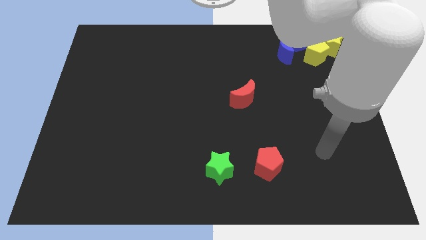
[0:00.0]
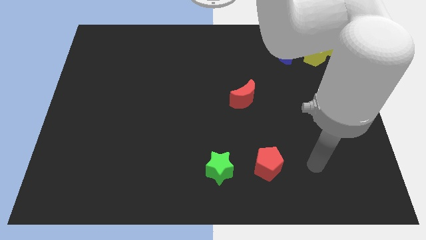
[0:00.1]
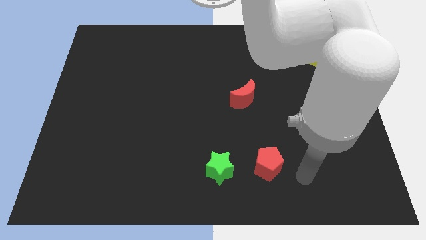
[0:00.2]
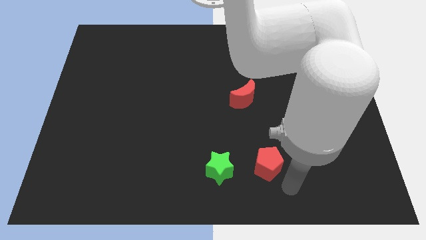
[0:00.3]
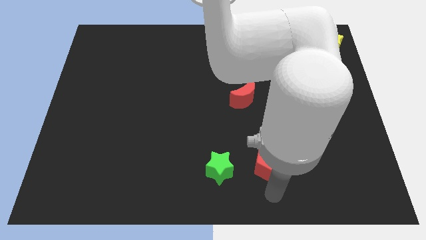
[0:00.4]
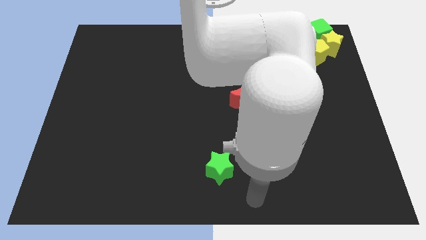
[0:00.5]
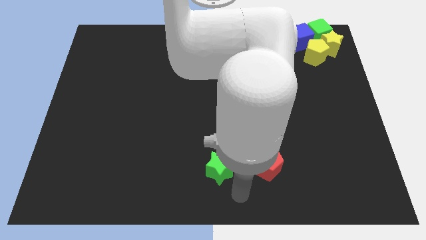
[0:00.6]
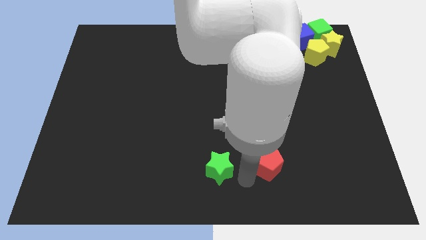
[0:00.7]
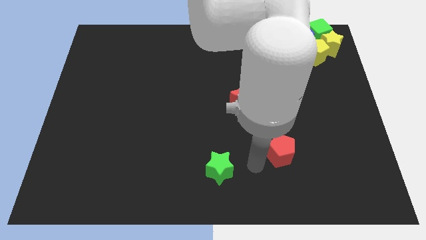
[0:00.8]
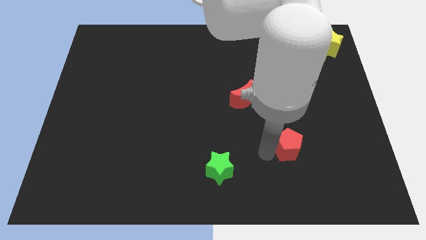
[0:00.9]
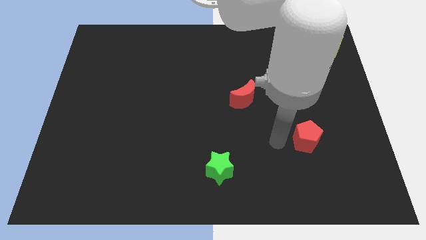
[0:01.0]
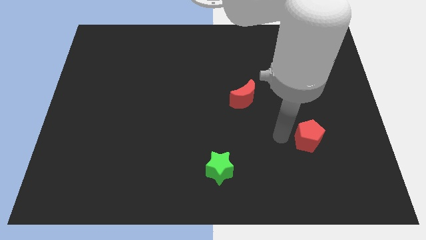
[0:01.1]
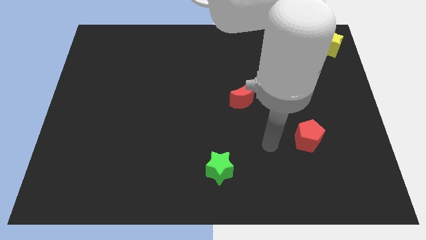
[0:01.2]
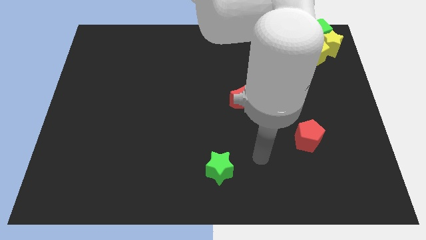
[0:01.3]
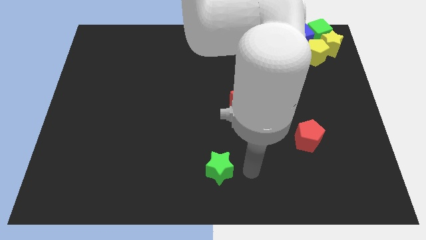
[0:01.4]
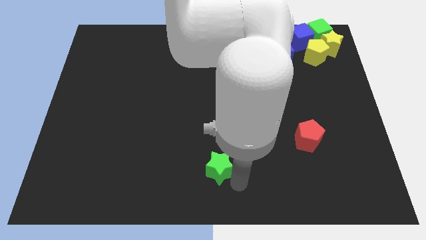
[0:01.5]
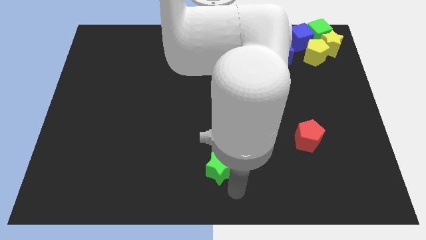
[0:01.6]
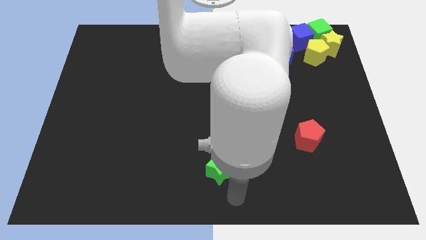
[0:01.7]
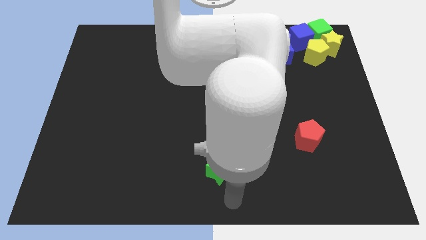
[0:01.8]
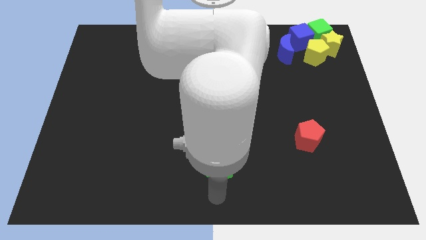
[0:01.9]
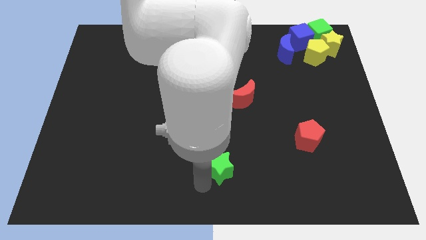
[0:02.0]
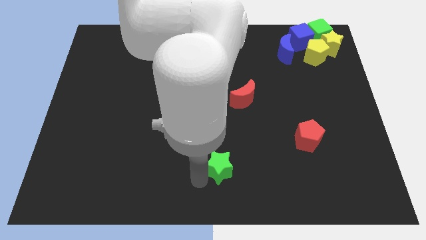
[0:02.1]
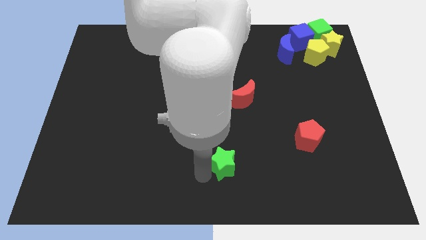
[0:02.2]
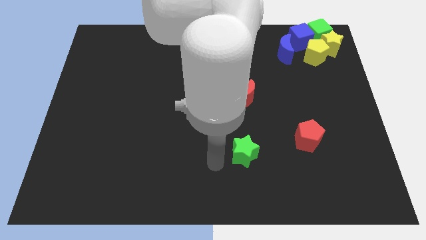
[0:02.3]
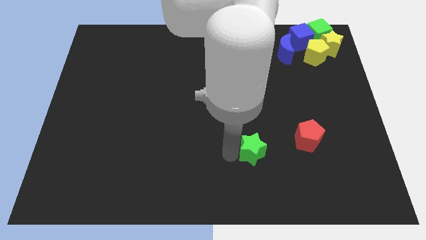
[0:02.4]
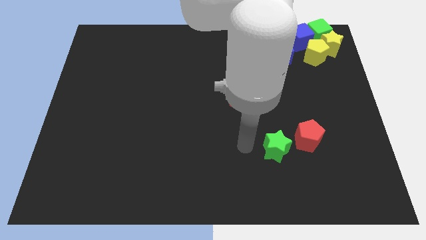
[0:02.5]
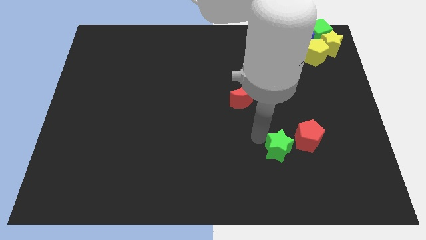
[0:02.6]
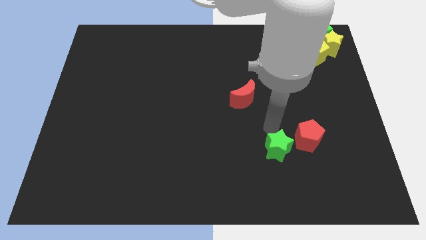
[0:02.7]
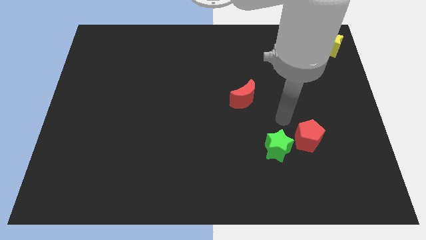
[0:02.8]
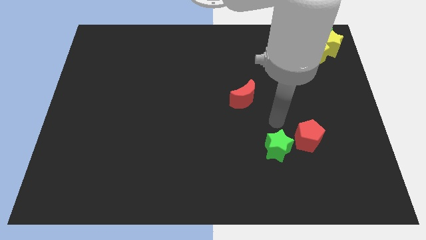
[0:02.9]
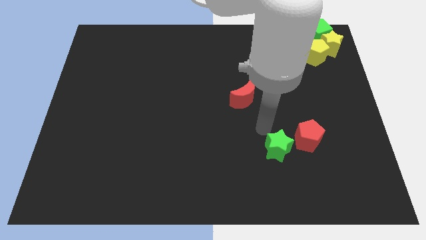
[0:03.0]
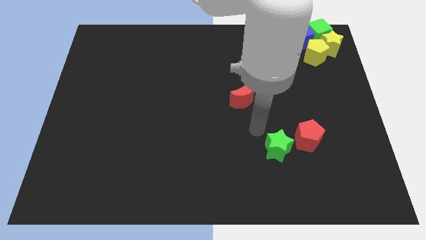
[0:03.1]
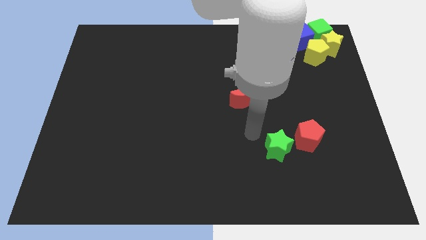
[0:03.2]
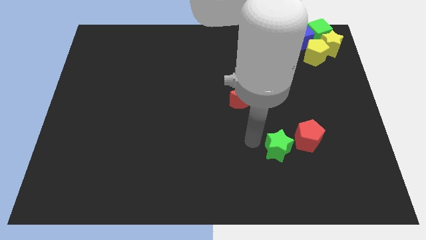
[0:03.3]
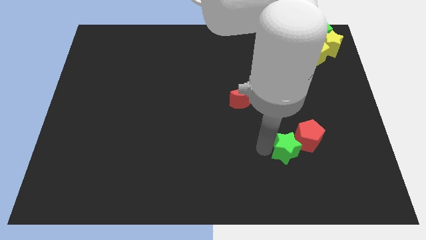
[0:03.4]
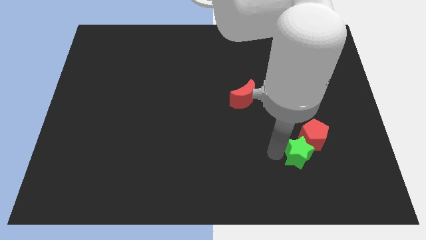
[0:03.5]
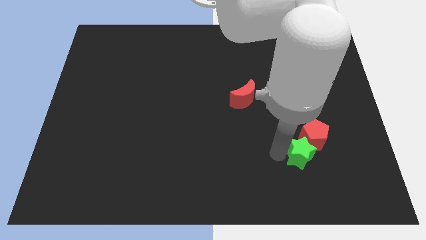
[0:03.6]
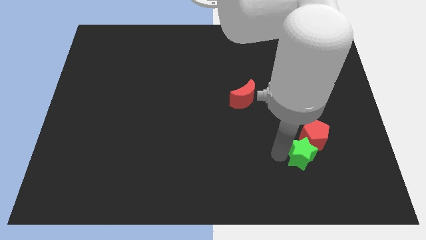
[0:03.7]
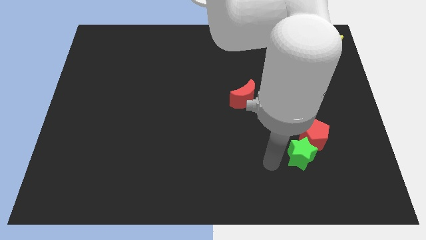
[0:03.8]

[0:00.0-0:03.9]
push the green star into the red pentagon

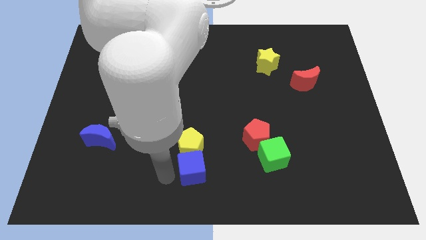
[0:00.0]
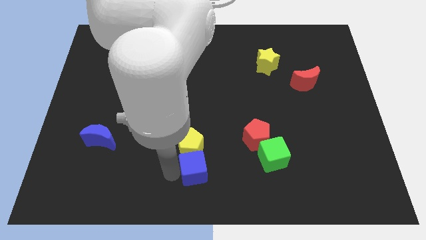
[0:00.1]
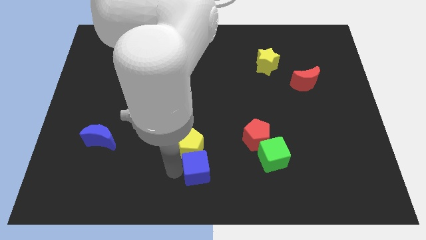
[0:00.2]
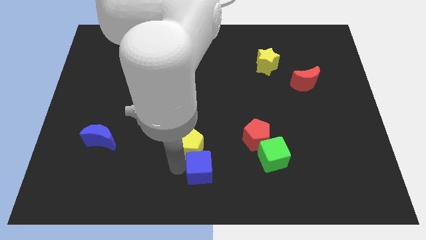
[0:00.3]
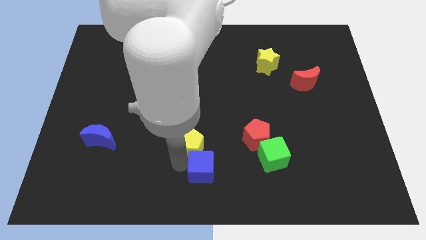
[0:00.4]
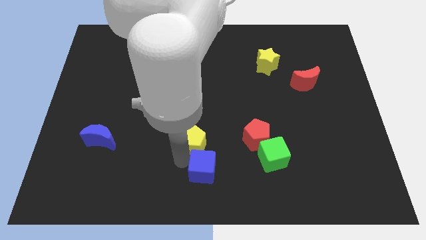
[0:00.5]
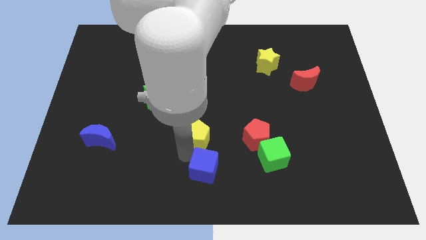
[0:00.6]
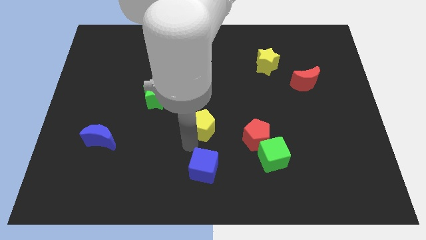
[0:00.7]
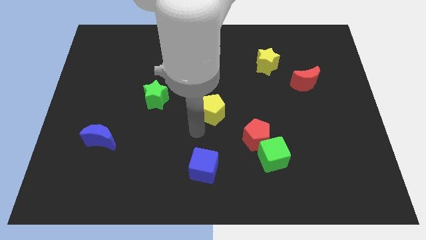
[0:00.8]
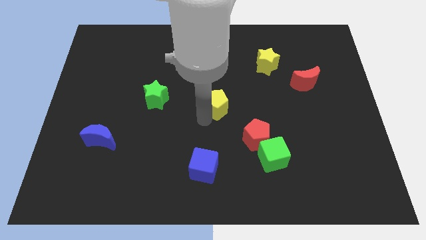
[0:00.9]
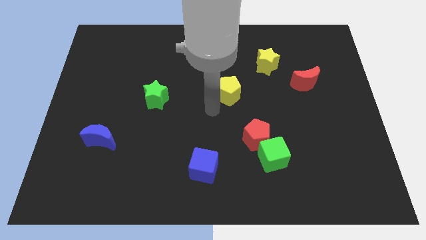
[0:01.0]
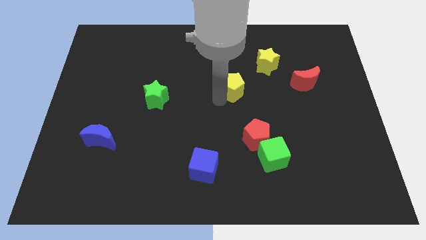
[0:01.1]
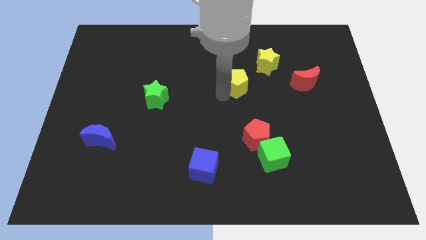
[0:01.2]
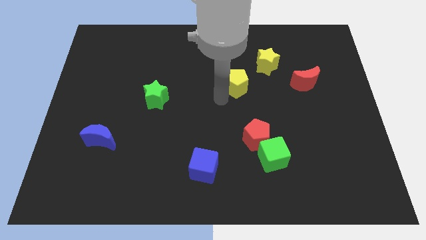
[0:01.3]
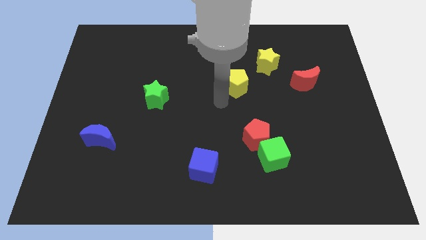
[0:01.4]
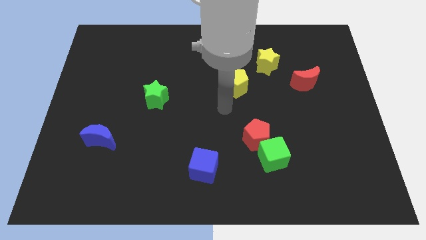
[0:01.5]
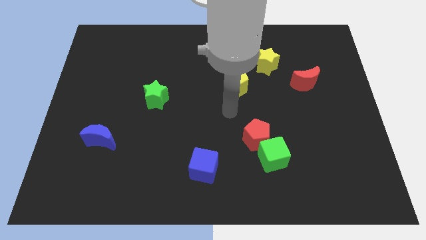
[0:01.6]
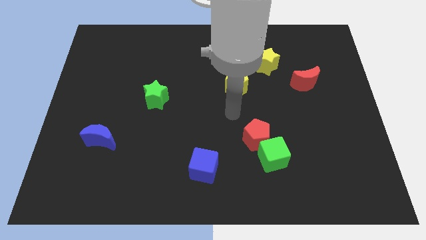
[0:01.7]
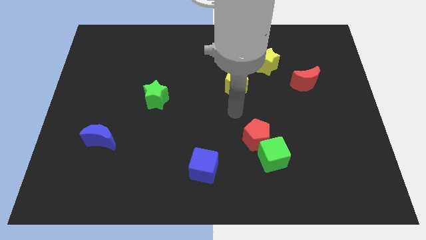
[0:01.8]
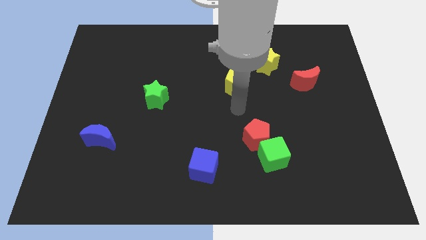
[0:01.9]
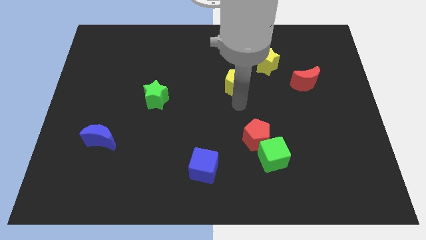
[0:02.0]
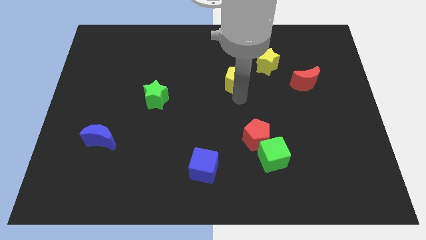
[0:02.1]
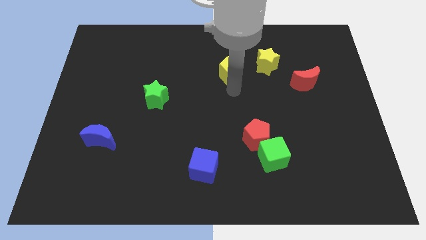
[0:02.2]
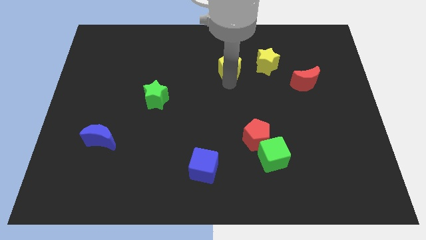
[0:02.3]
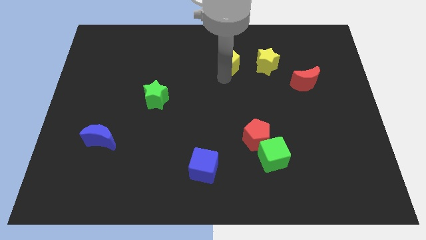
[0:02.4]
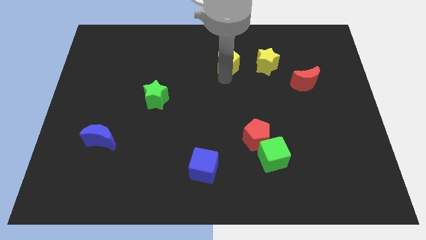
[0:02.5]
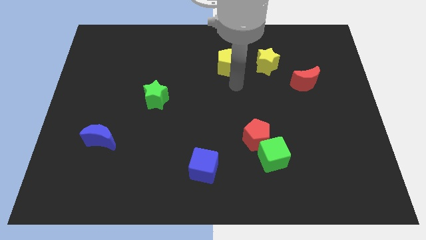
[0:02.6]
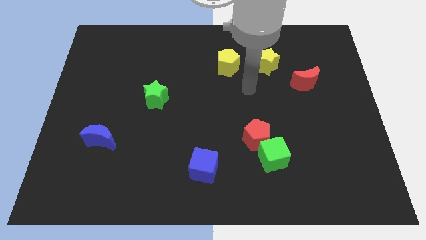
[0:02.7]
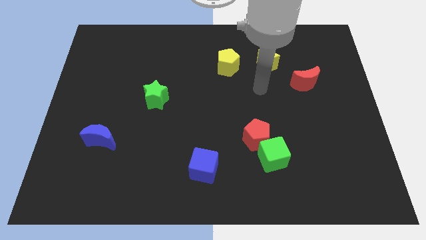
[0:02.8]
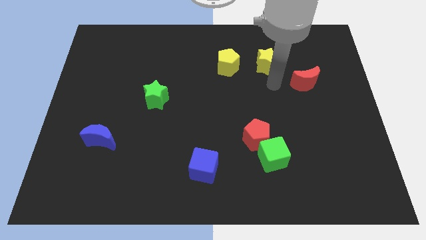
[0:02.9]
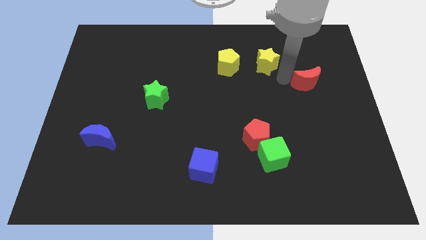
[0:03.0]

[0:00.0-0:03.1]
put the yellow pentagon to the left of the yellow star

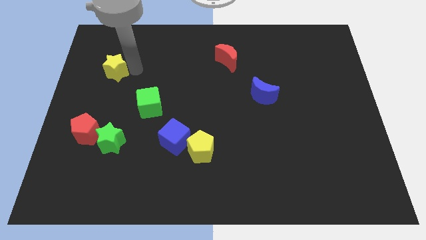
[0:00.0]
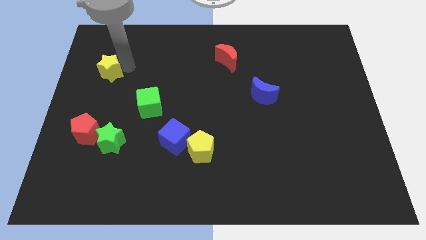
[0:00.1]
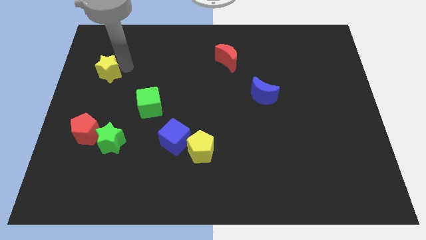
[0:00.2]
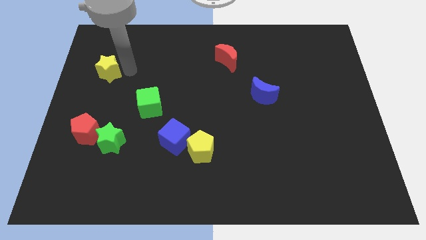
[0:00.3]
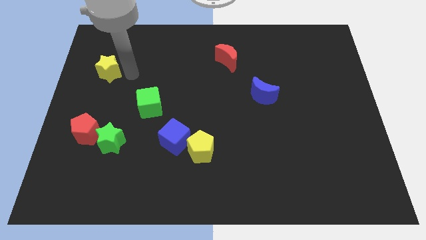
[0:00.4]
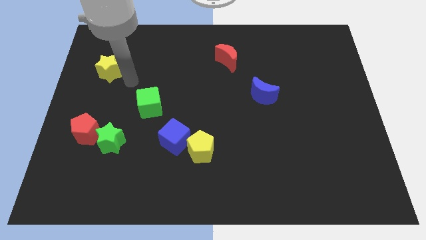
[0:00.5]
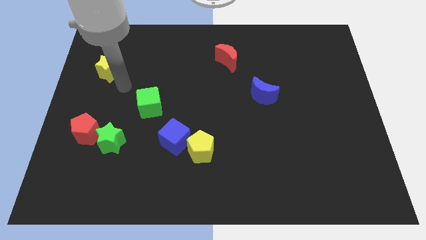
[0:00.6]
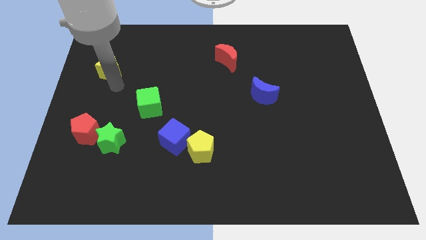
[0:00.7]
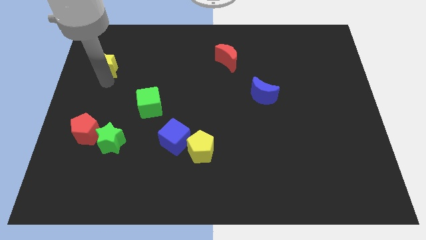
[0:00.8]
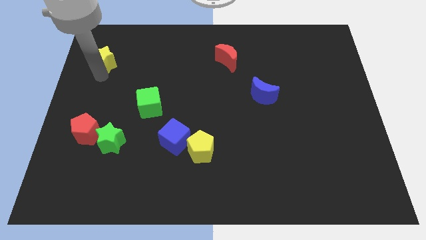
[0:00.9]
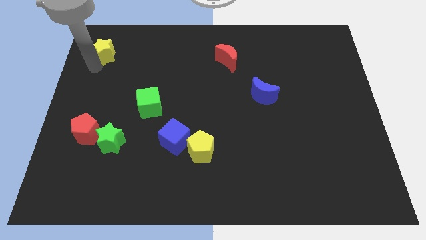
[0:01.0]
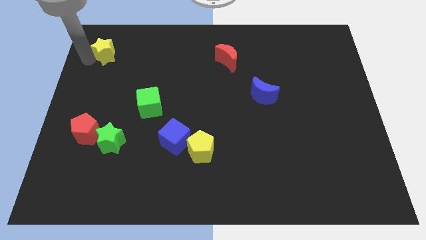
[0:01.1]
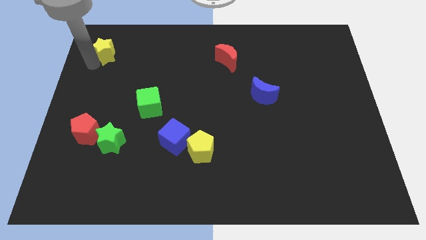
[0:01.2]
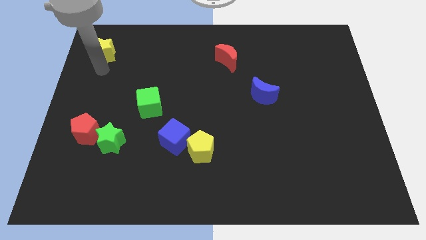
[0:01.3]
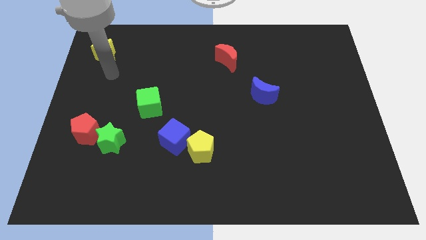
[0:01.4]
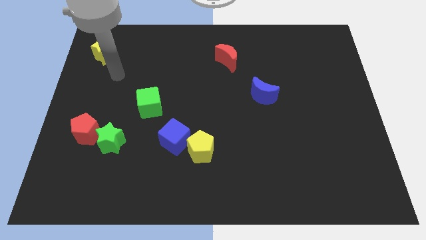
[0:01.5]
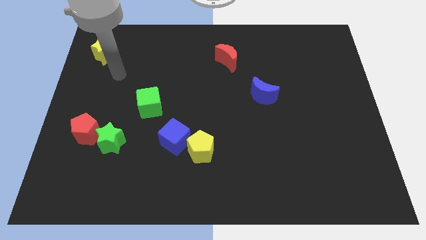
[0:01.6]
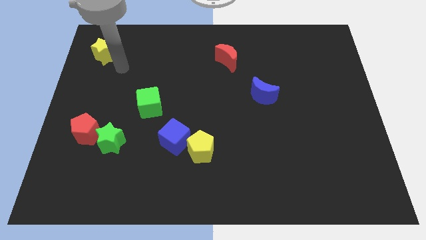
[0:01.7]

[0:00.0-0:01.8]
drag the yellow star towards the top left side of the board

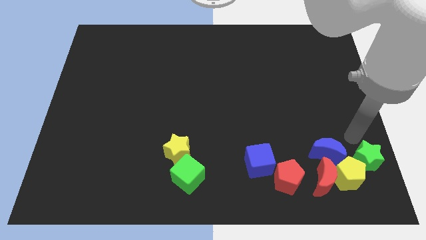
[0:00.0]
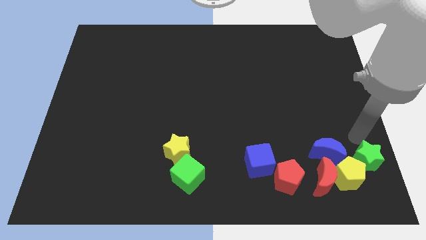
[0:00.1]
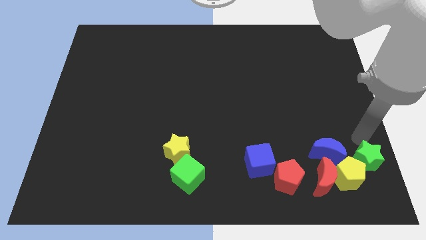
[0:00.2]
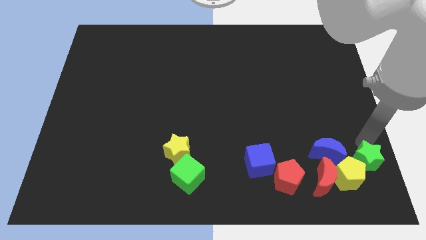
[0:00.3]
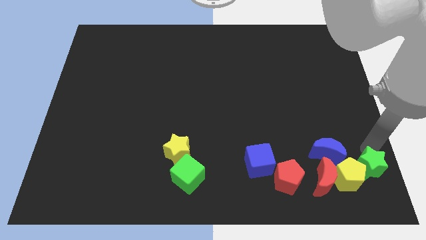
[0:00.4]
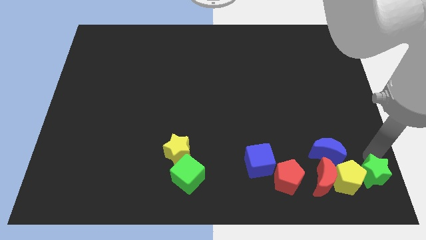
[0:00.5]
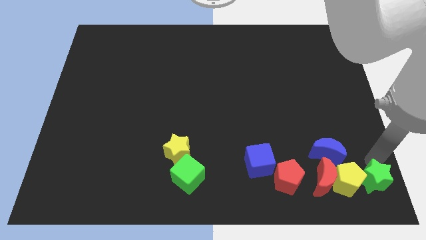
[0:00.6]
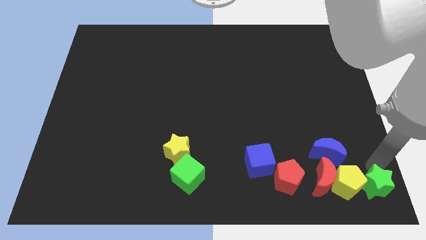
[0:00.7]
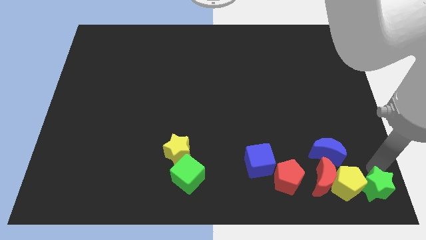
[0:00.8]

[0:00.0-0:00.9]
move the green star slightly to the down
